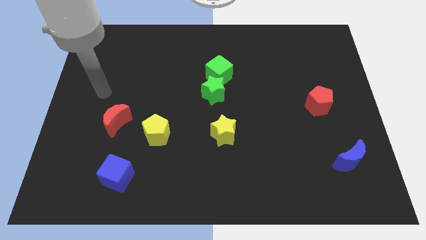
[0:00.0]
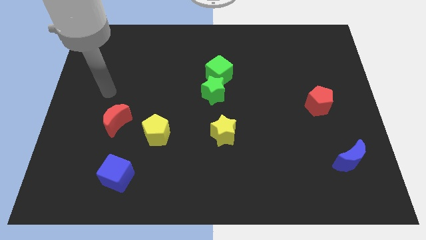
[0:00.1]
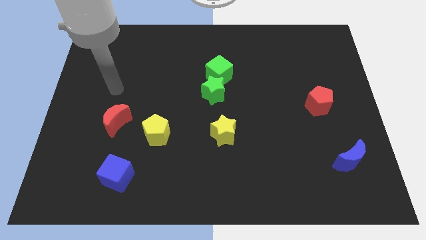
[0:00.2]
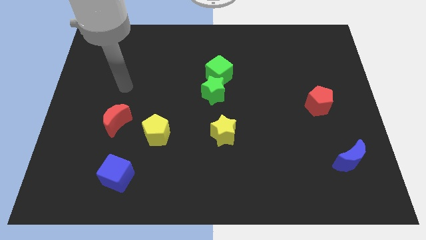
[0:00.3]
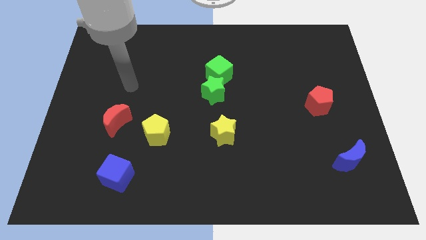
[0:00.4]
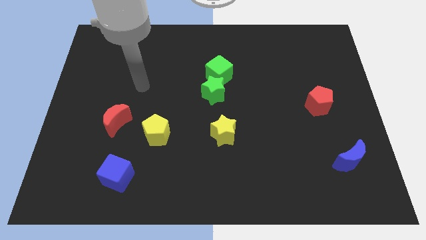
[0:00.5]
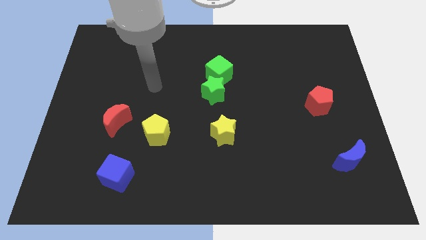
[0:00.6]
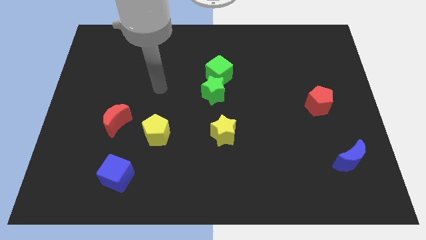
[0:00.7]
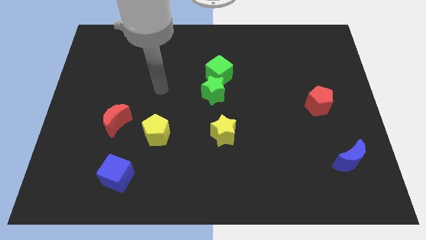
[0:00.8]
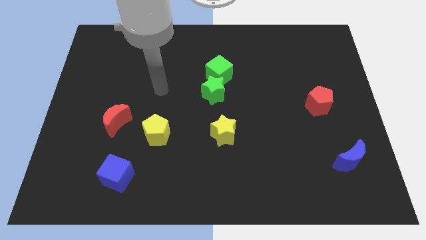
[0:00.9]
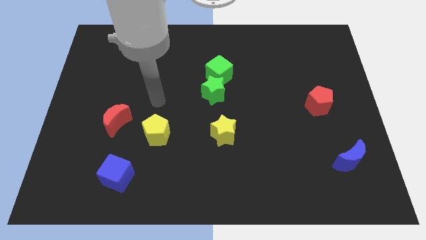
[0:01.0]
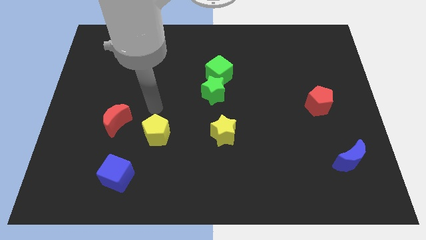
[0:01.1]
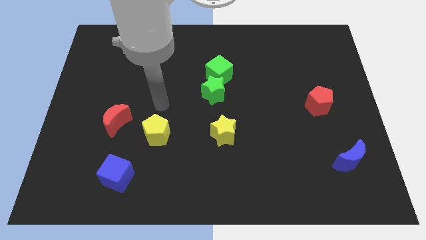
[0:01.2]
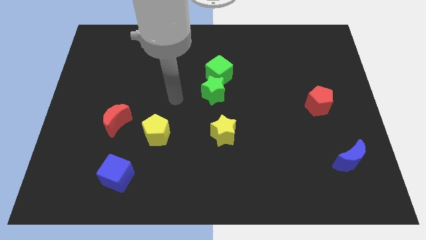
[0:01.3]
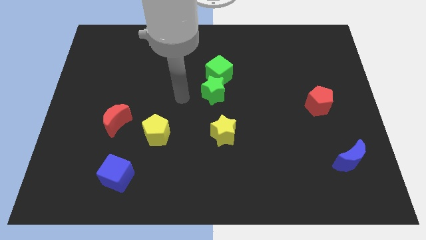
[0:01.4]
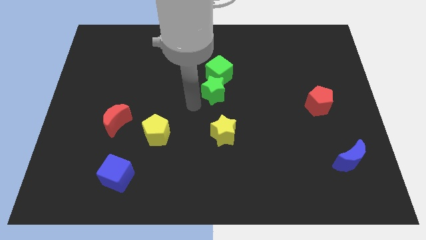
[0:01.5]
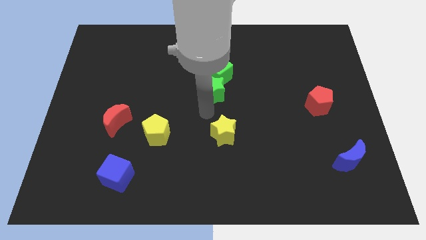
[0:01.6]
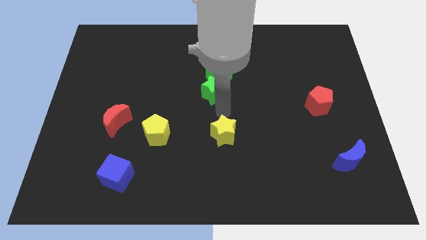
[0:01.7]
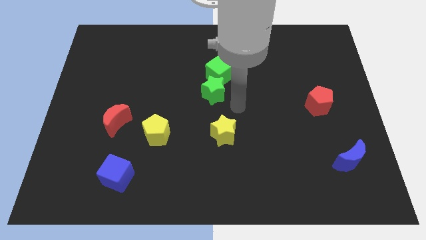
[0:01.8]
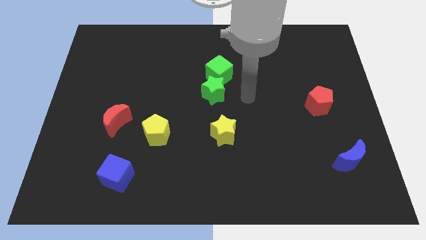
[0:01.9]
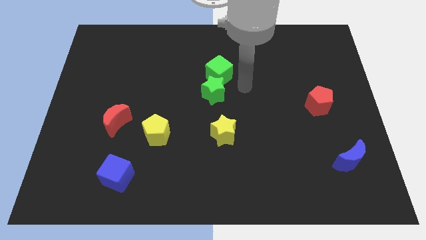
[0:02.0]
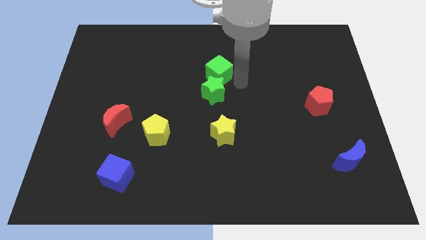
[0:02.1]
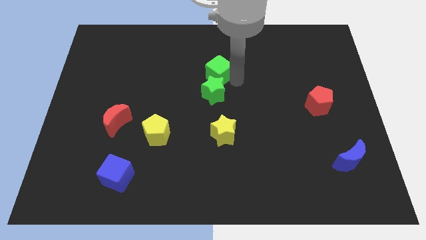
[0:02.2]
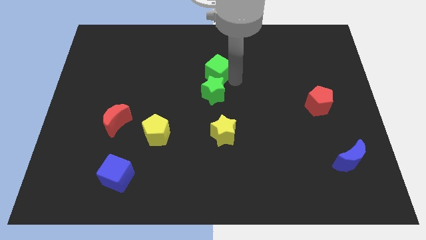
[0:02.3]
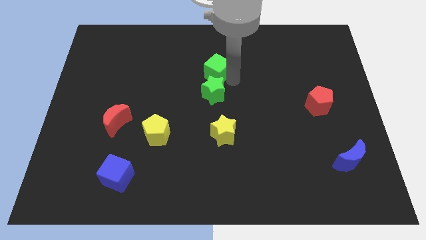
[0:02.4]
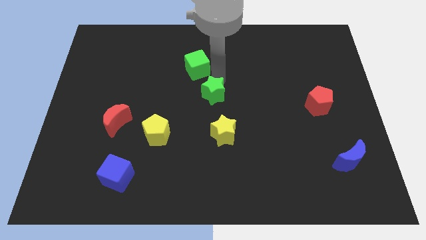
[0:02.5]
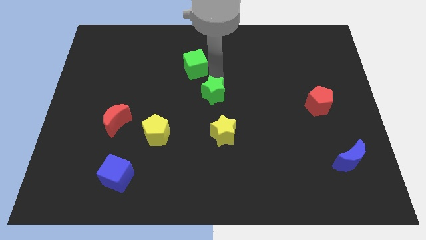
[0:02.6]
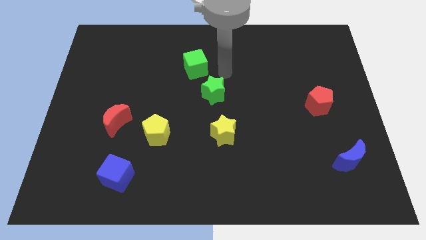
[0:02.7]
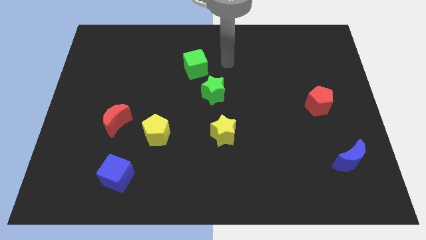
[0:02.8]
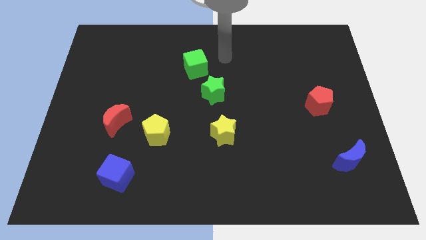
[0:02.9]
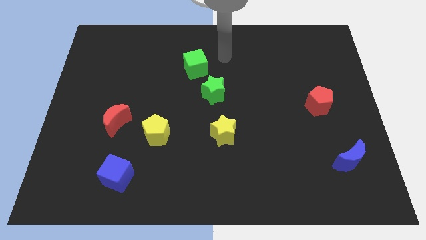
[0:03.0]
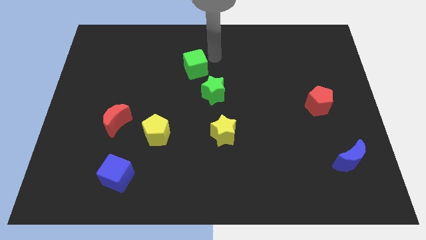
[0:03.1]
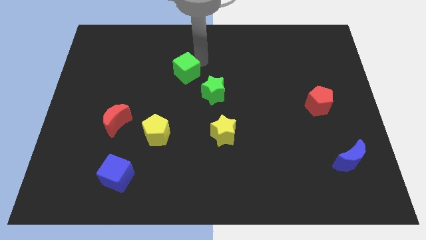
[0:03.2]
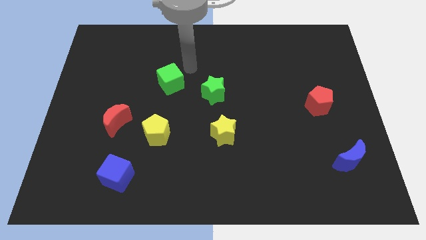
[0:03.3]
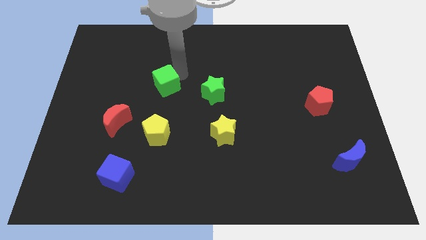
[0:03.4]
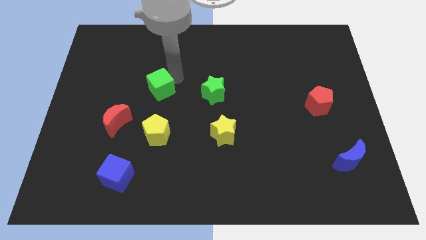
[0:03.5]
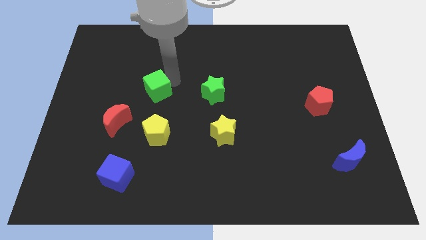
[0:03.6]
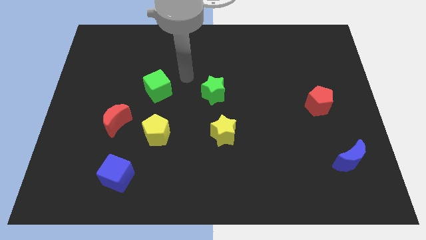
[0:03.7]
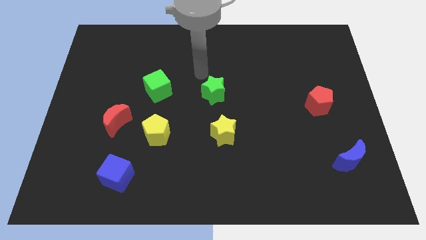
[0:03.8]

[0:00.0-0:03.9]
place green cube vertical below to yellow pentagon

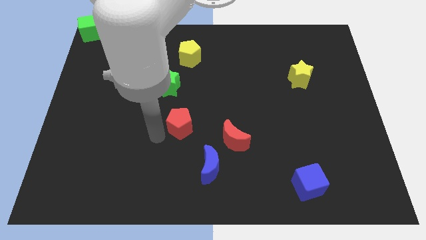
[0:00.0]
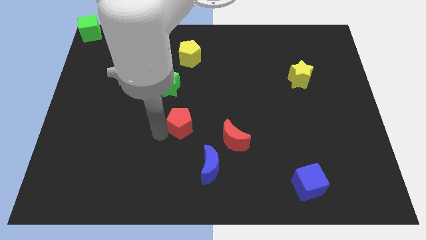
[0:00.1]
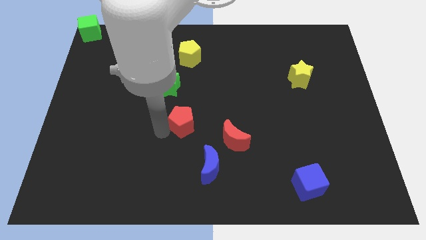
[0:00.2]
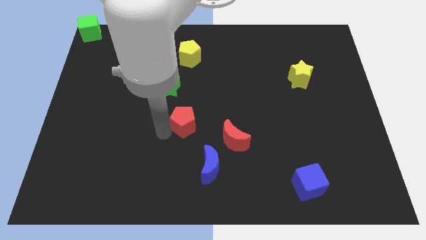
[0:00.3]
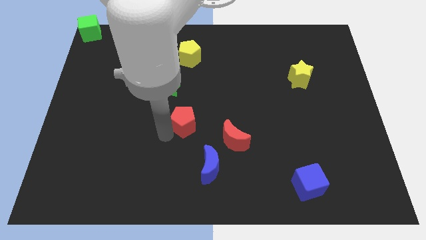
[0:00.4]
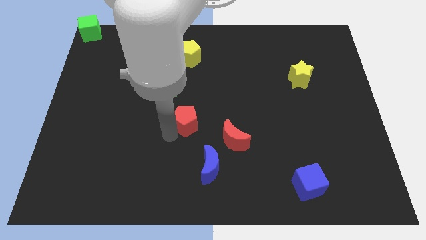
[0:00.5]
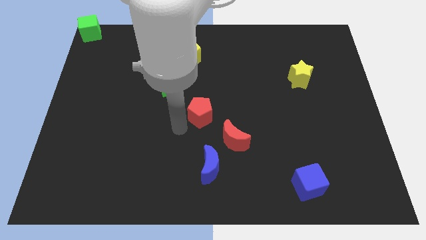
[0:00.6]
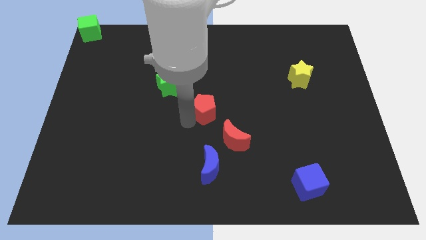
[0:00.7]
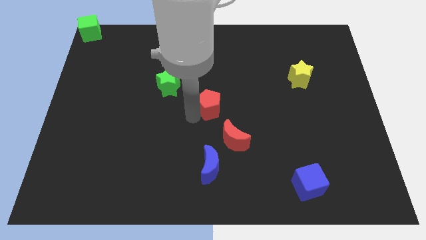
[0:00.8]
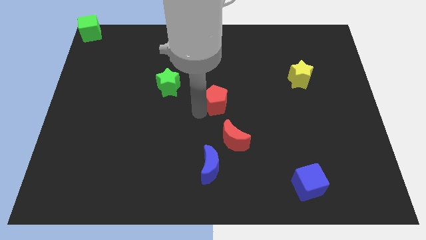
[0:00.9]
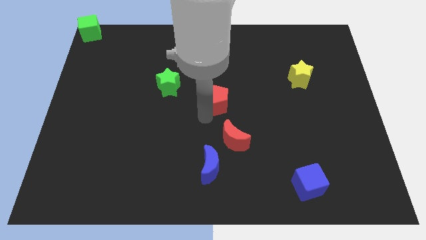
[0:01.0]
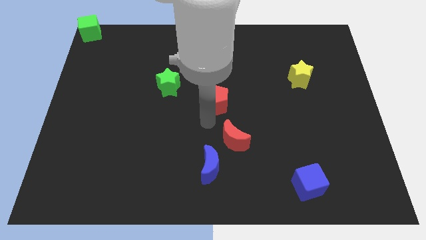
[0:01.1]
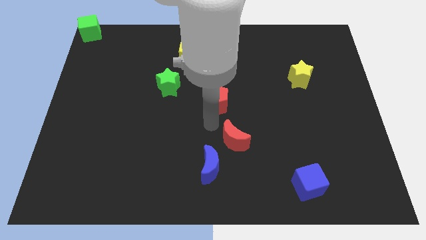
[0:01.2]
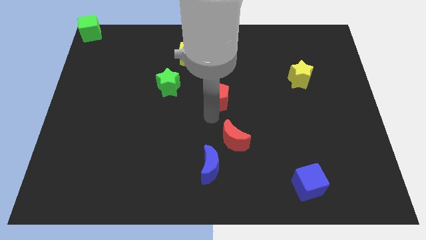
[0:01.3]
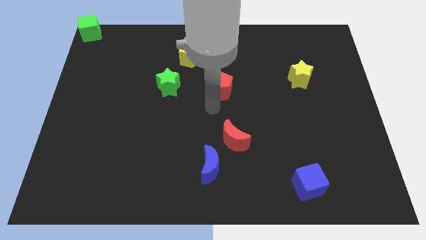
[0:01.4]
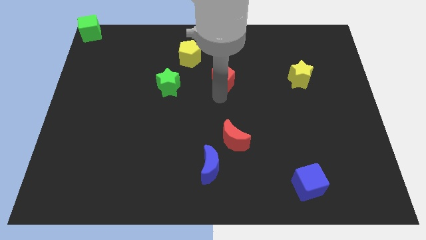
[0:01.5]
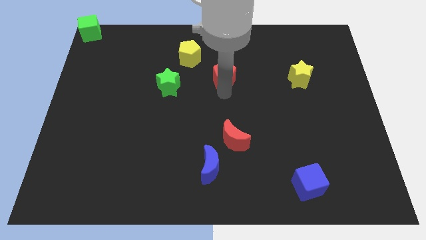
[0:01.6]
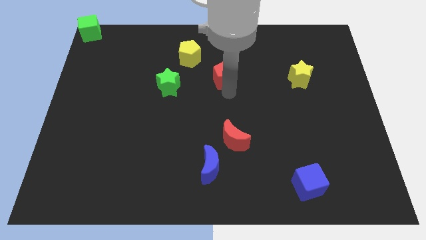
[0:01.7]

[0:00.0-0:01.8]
place the red pentagon in between the green star and yellow star

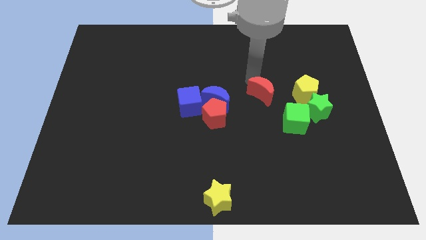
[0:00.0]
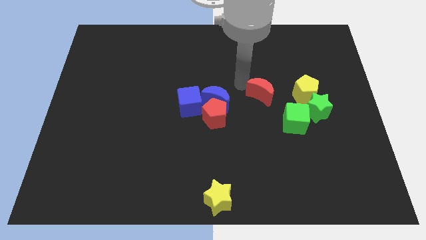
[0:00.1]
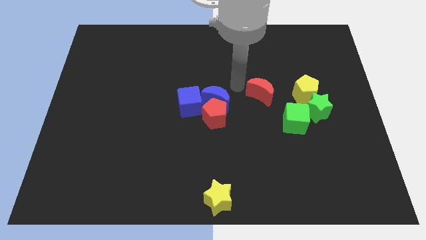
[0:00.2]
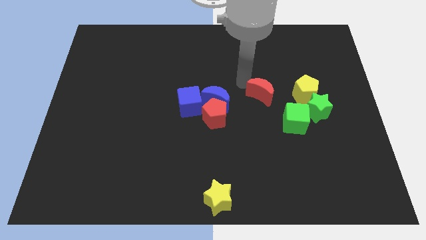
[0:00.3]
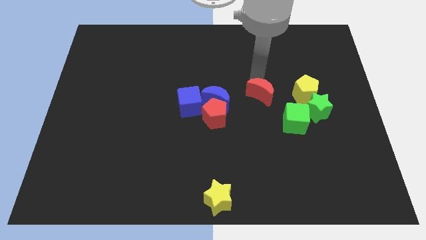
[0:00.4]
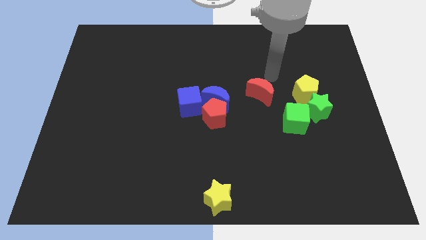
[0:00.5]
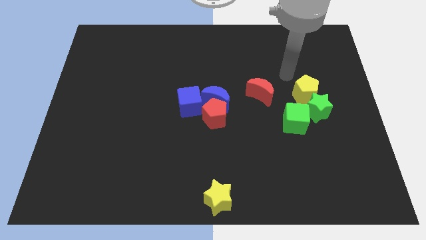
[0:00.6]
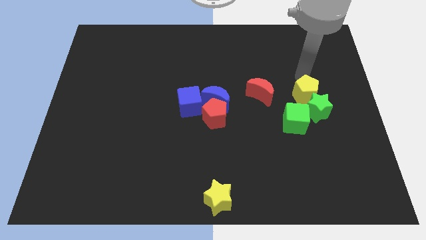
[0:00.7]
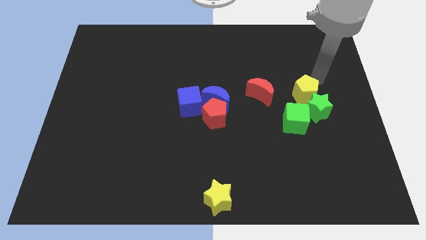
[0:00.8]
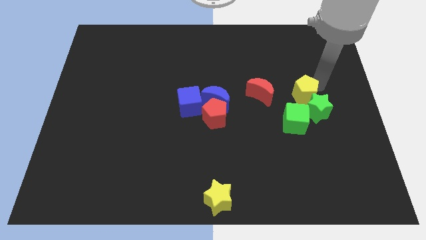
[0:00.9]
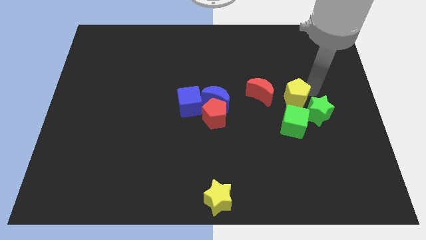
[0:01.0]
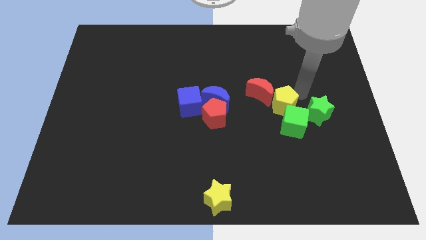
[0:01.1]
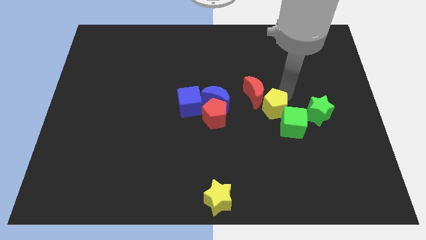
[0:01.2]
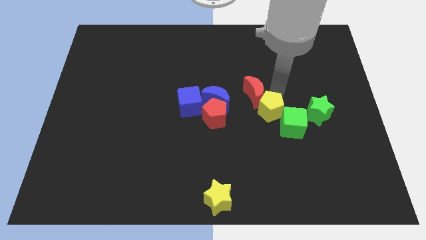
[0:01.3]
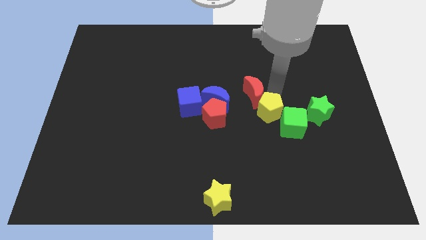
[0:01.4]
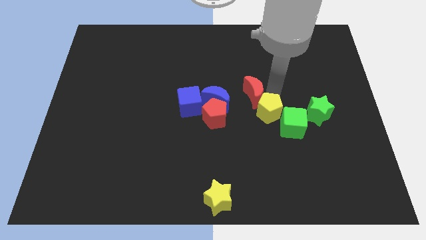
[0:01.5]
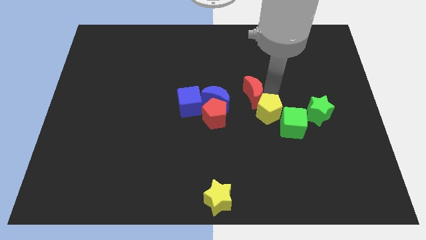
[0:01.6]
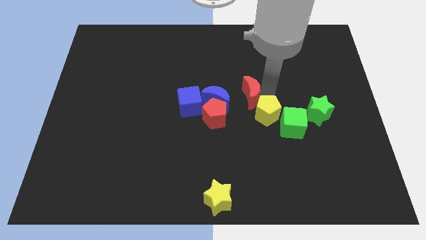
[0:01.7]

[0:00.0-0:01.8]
push the yellow pentagon between red moon and green cube

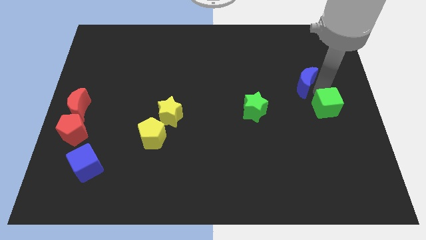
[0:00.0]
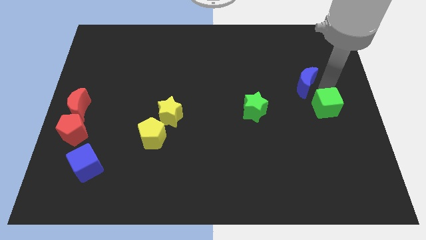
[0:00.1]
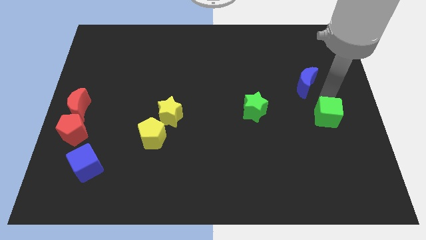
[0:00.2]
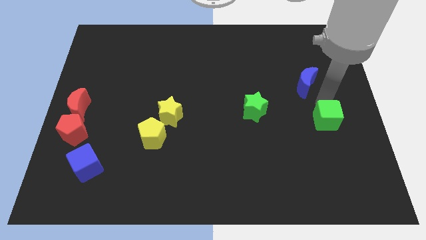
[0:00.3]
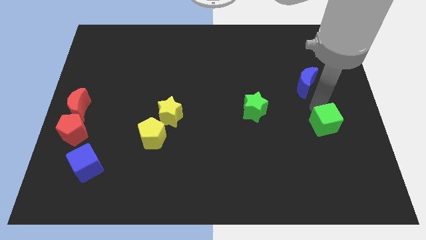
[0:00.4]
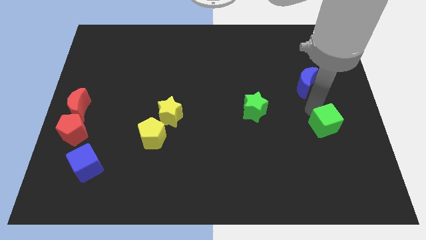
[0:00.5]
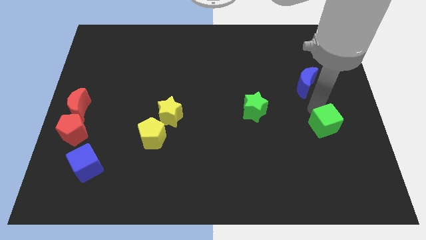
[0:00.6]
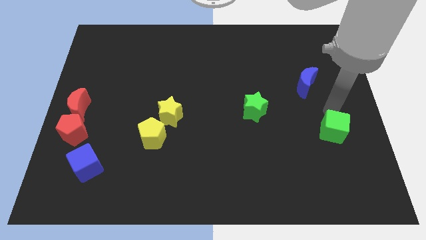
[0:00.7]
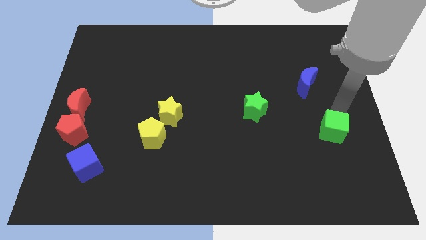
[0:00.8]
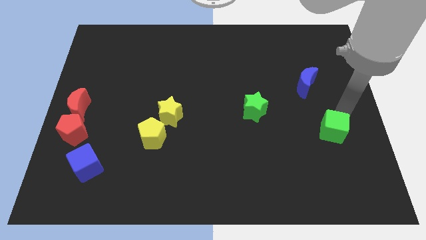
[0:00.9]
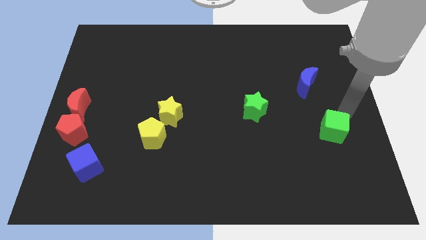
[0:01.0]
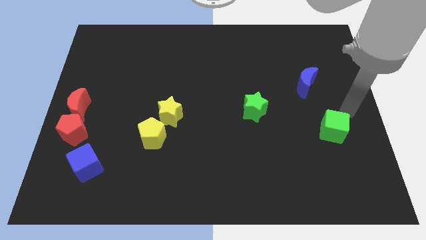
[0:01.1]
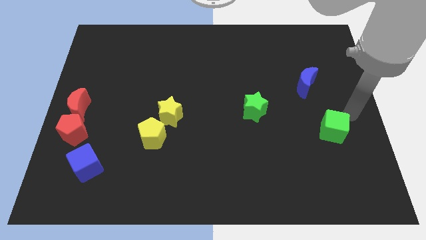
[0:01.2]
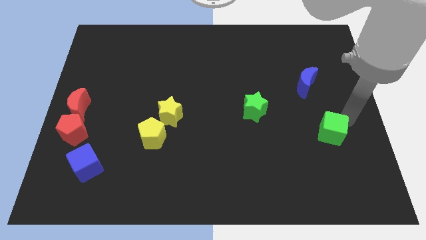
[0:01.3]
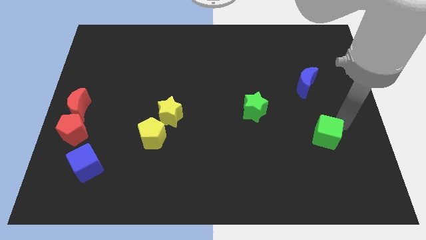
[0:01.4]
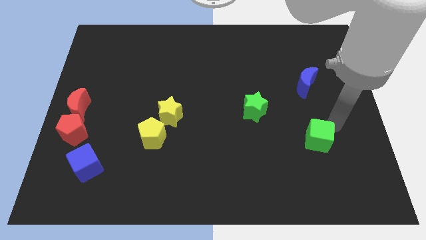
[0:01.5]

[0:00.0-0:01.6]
separate the green cube from the blue crescent
